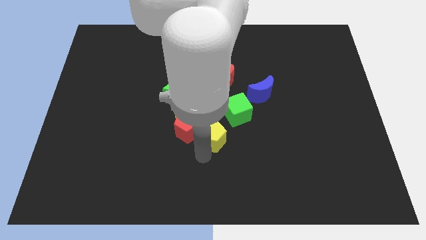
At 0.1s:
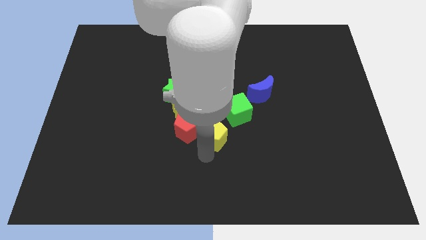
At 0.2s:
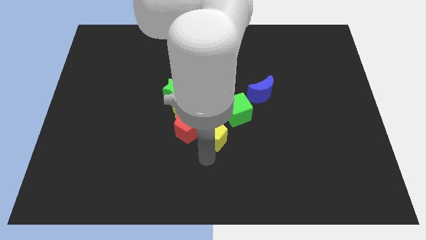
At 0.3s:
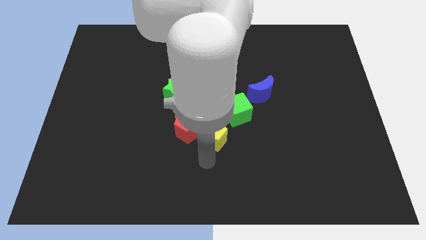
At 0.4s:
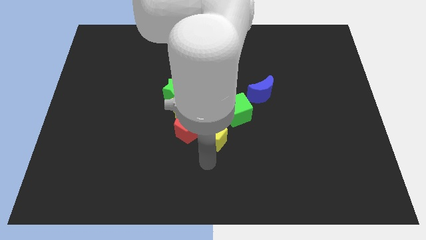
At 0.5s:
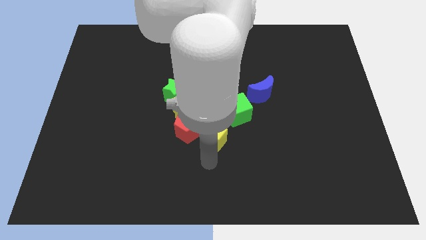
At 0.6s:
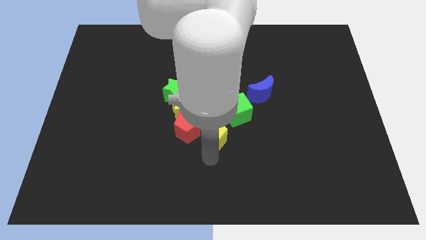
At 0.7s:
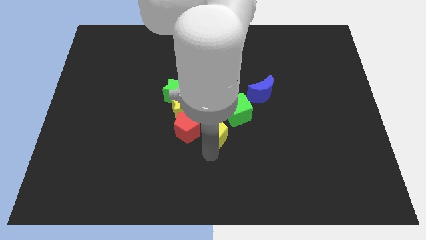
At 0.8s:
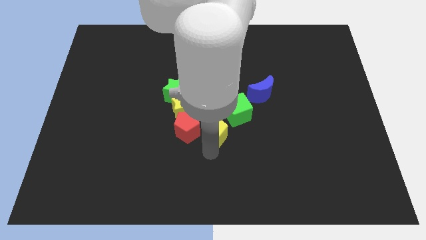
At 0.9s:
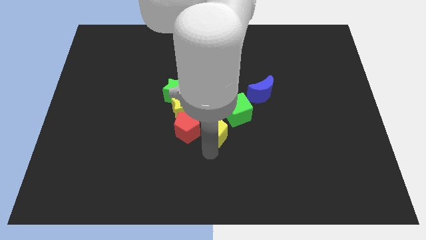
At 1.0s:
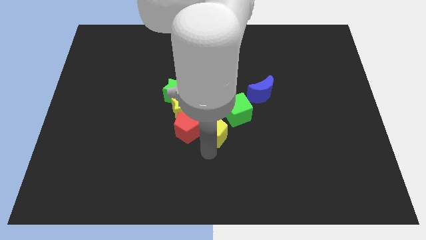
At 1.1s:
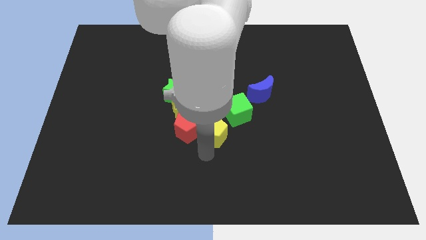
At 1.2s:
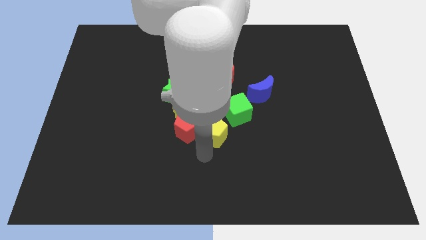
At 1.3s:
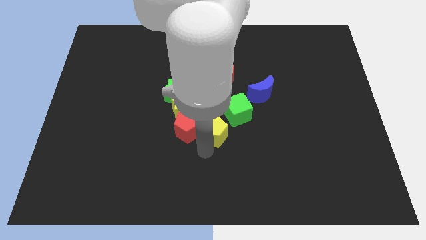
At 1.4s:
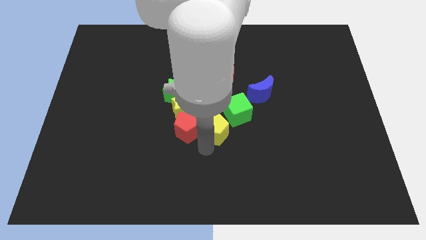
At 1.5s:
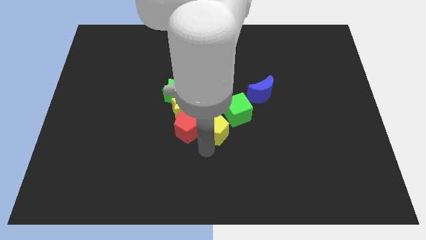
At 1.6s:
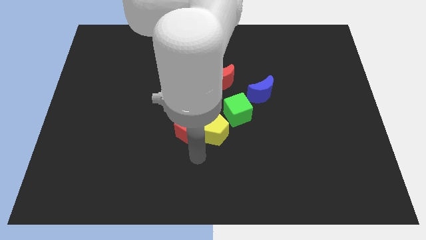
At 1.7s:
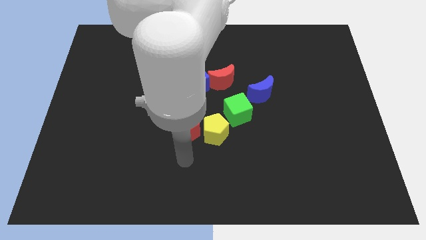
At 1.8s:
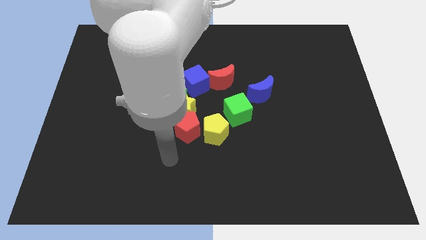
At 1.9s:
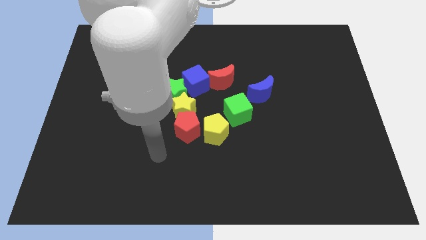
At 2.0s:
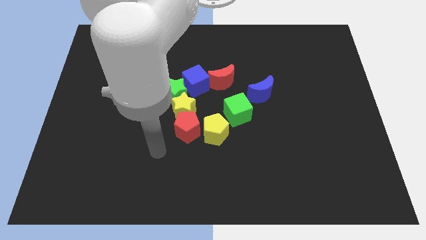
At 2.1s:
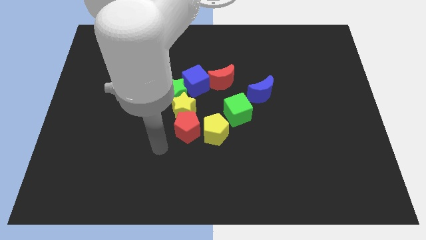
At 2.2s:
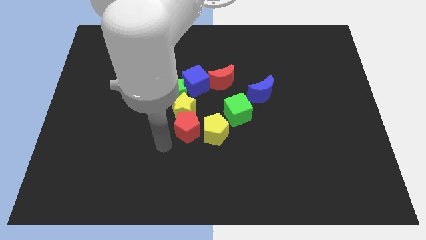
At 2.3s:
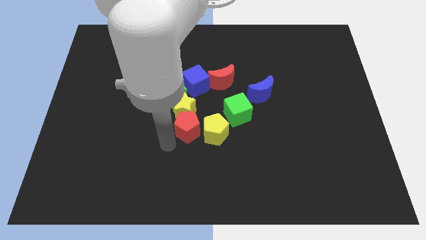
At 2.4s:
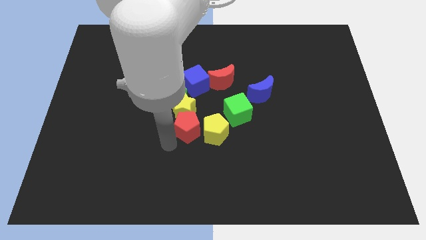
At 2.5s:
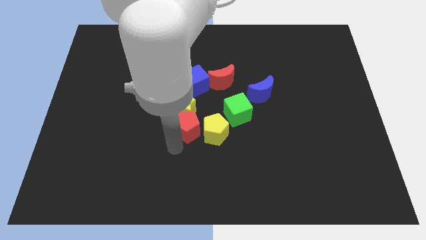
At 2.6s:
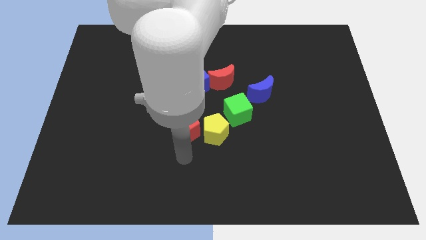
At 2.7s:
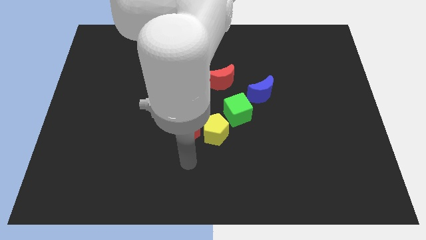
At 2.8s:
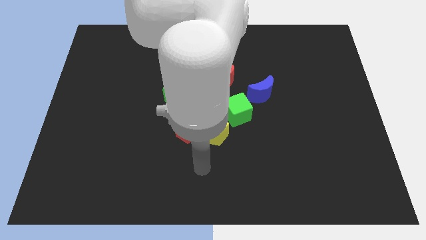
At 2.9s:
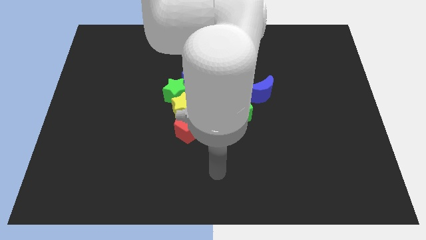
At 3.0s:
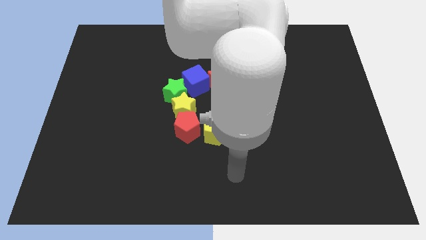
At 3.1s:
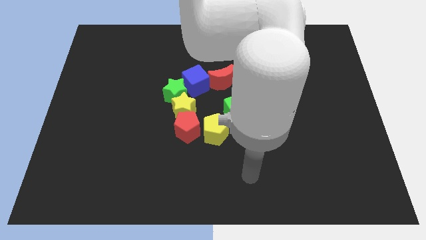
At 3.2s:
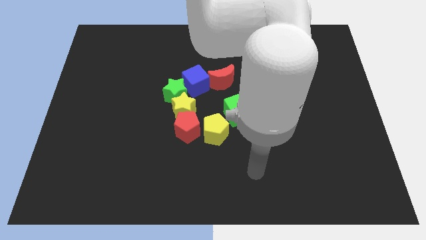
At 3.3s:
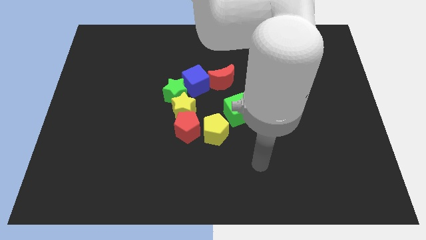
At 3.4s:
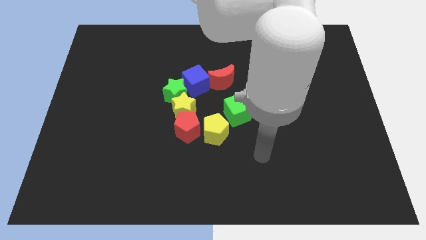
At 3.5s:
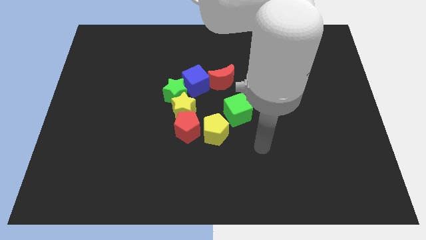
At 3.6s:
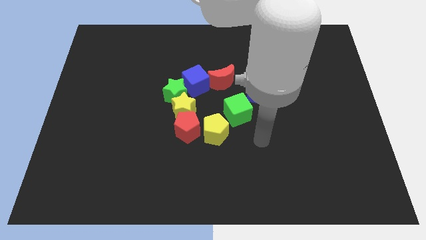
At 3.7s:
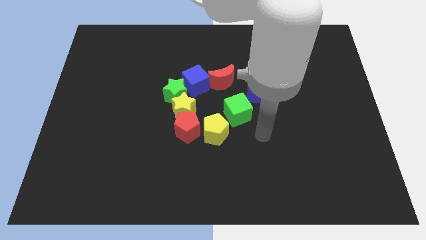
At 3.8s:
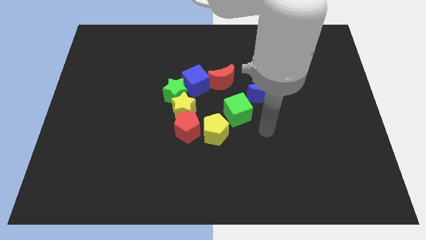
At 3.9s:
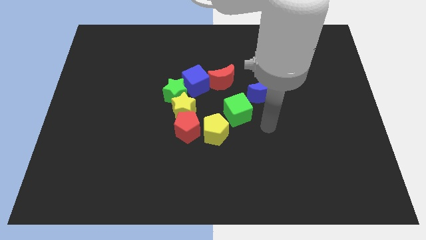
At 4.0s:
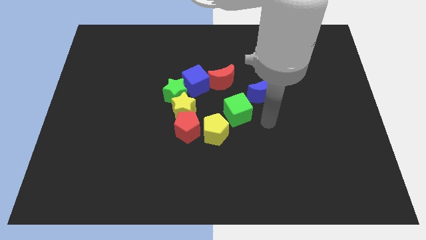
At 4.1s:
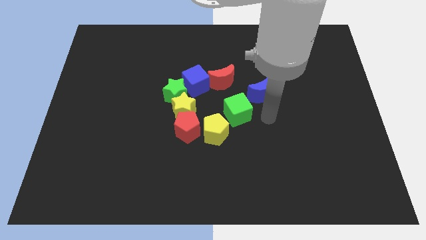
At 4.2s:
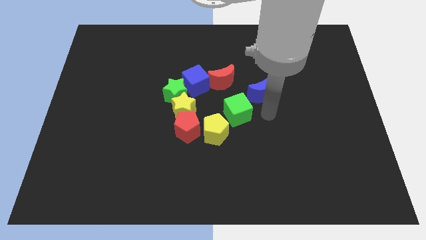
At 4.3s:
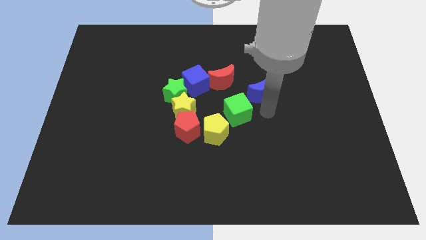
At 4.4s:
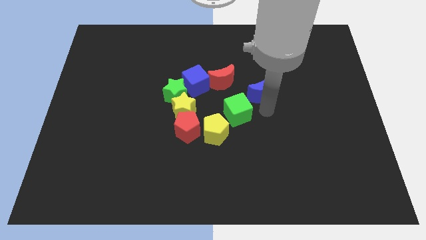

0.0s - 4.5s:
move arm below the blue moon

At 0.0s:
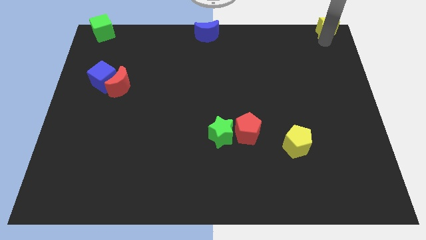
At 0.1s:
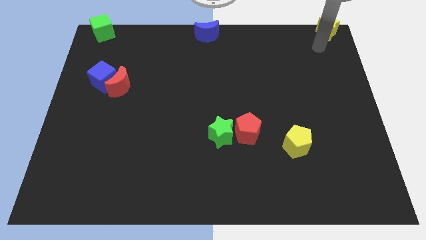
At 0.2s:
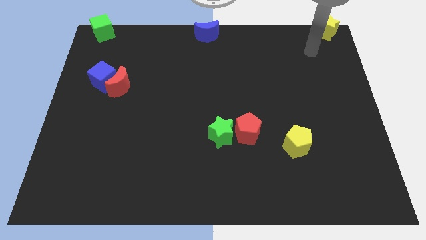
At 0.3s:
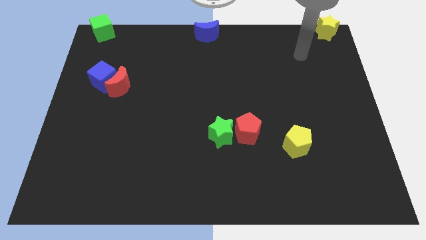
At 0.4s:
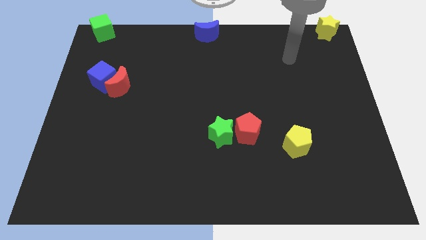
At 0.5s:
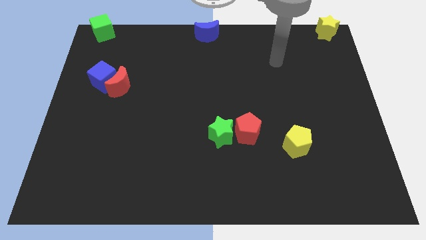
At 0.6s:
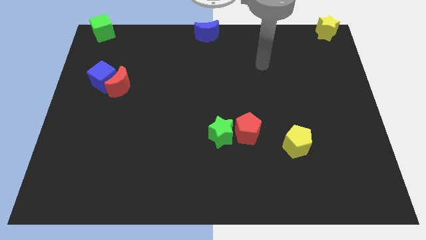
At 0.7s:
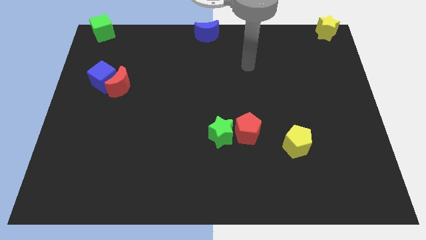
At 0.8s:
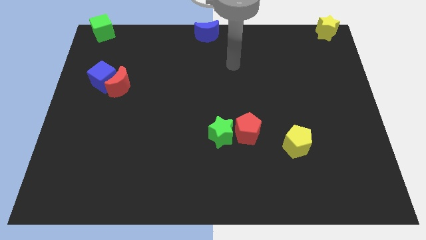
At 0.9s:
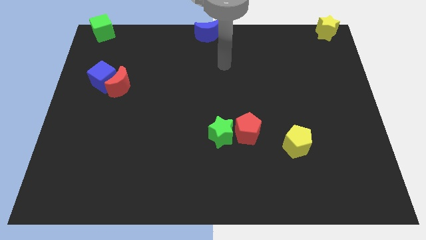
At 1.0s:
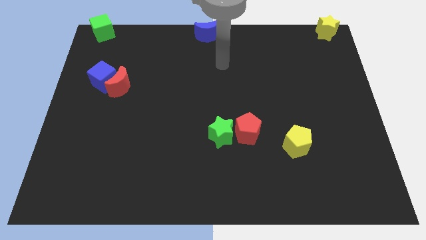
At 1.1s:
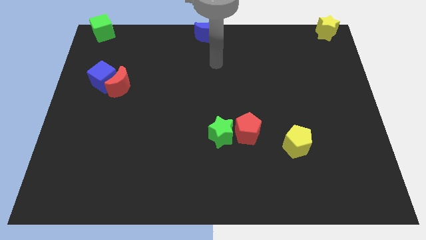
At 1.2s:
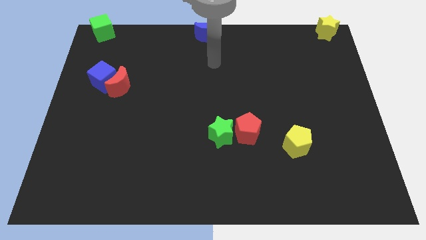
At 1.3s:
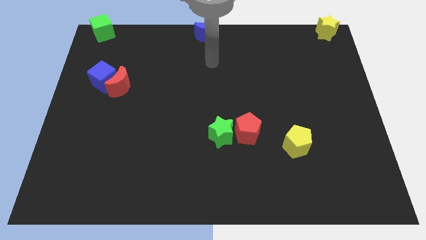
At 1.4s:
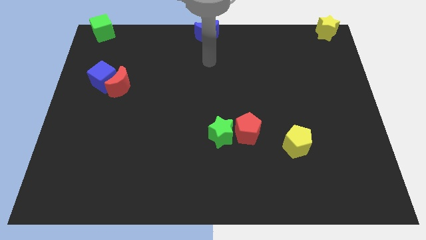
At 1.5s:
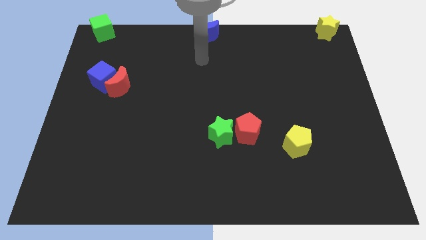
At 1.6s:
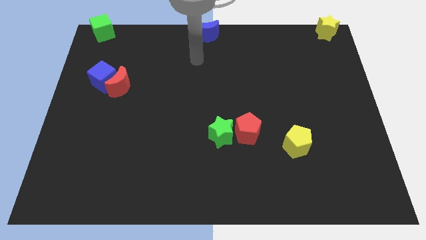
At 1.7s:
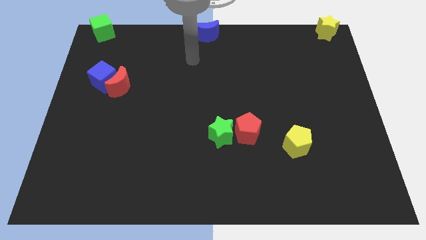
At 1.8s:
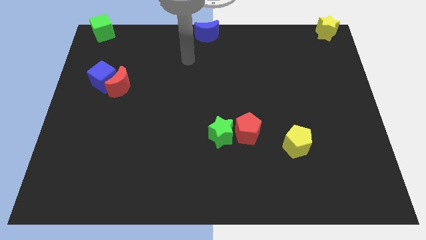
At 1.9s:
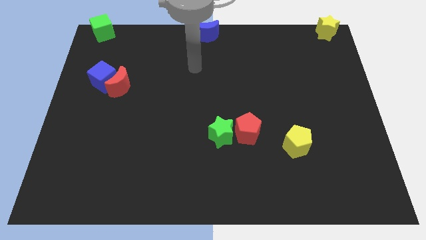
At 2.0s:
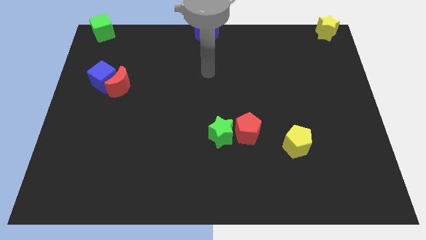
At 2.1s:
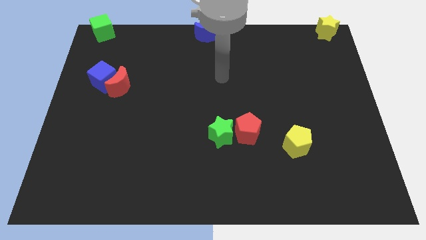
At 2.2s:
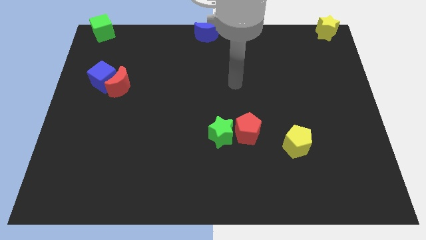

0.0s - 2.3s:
move your arm away from the yellow star

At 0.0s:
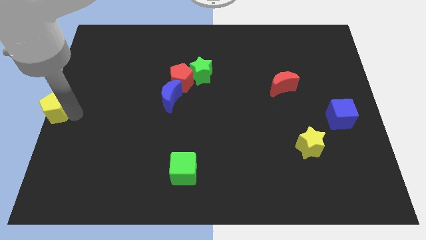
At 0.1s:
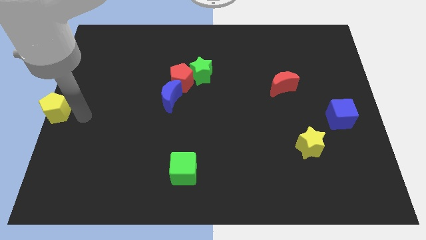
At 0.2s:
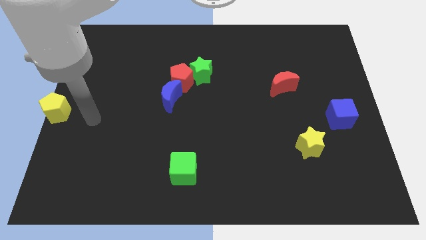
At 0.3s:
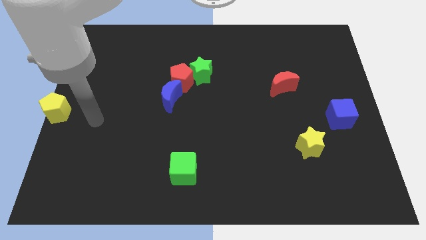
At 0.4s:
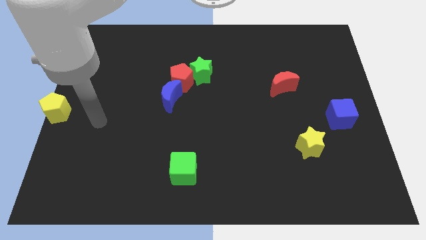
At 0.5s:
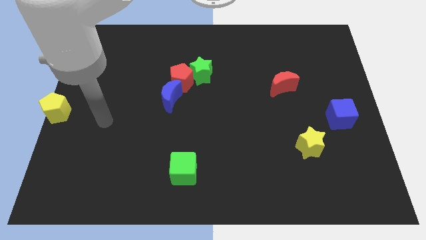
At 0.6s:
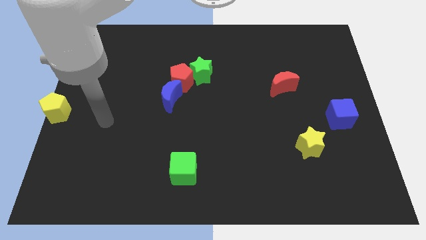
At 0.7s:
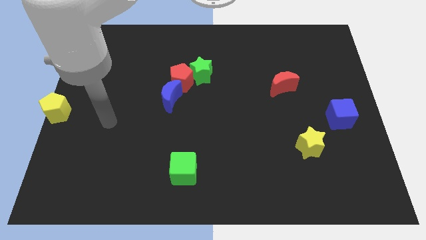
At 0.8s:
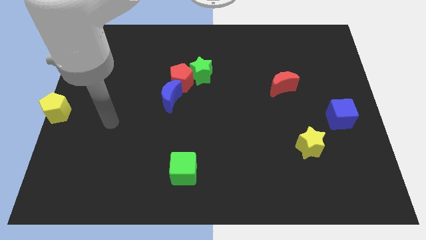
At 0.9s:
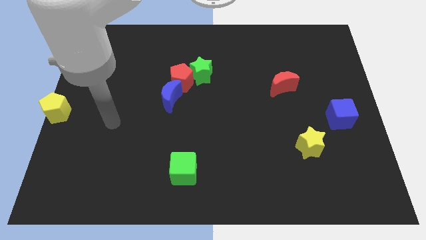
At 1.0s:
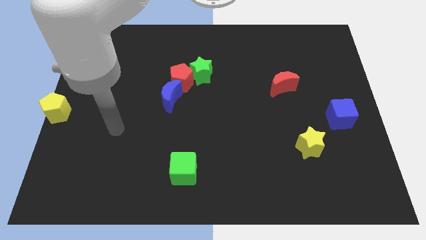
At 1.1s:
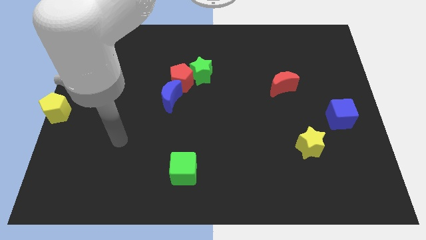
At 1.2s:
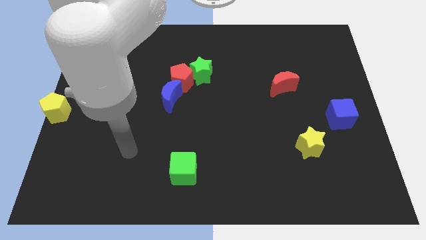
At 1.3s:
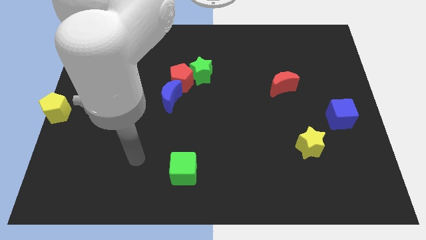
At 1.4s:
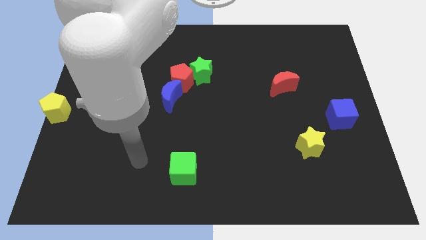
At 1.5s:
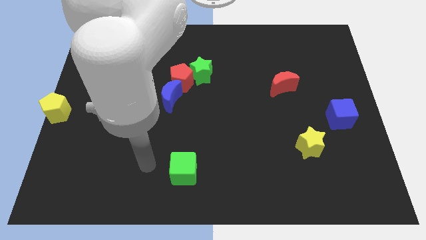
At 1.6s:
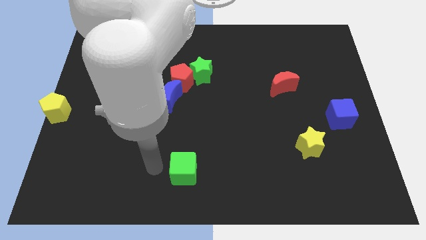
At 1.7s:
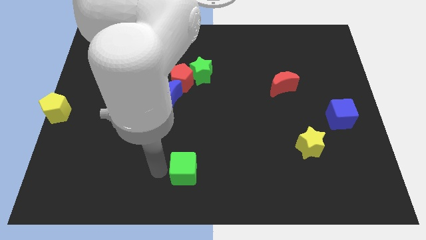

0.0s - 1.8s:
move your arm towards the green cube

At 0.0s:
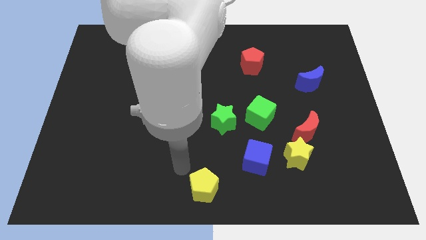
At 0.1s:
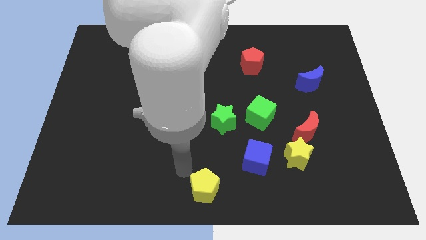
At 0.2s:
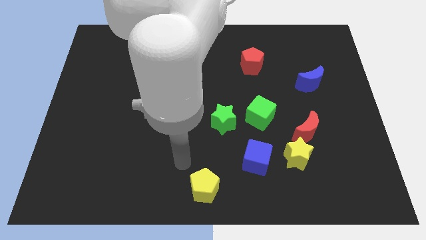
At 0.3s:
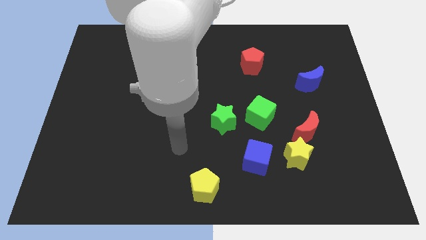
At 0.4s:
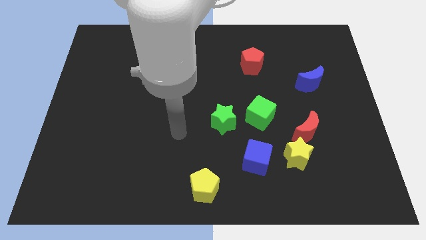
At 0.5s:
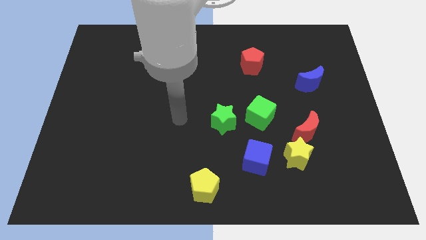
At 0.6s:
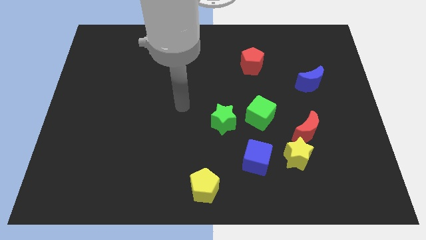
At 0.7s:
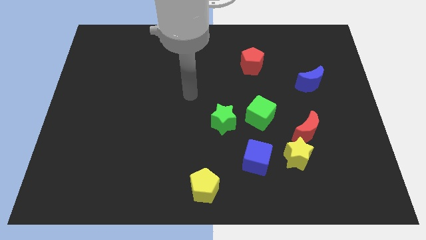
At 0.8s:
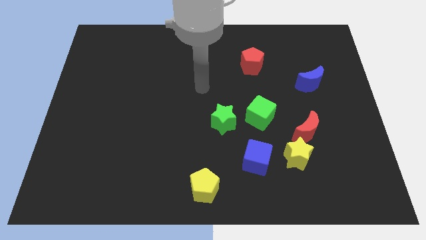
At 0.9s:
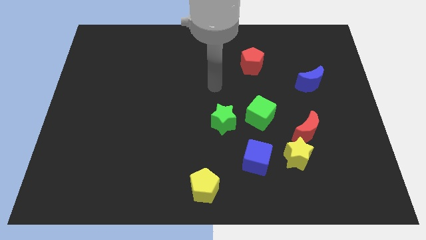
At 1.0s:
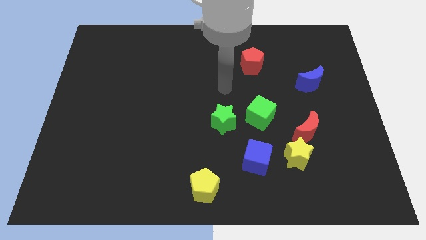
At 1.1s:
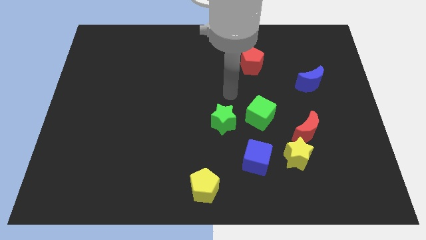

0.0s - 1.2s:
move the arm above the green star
